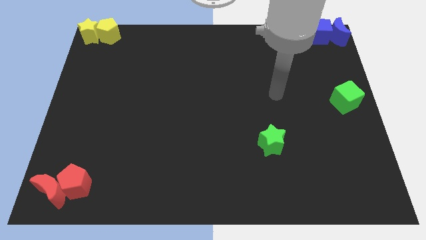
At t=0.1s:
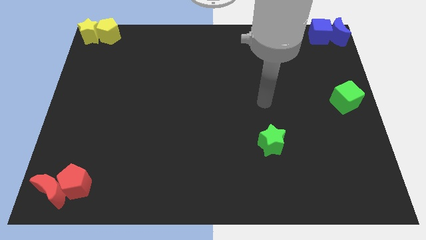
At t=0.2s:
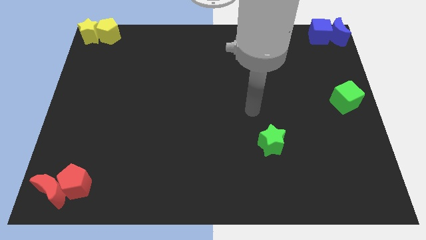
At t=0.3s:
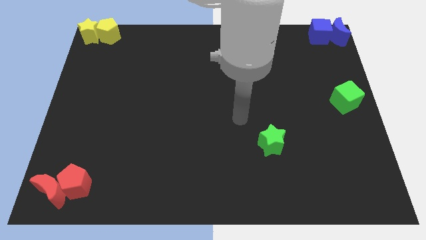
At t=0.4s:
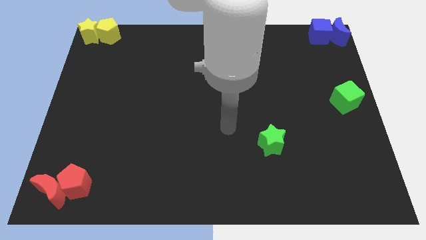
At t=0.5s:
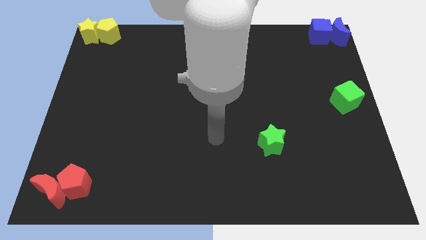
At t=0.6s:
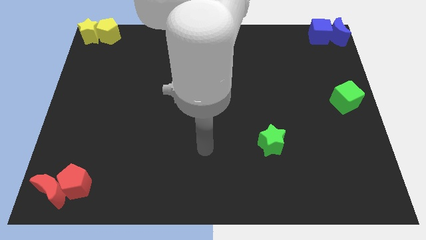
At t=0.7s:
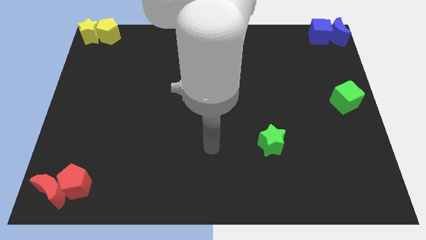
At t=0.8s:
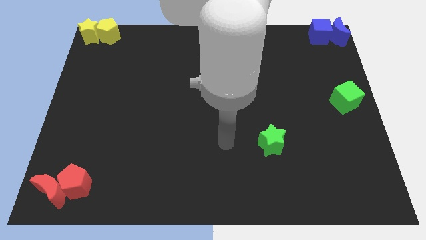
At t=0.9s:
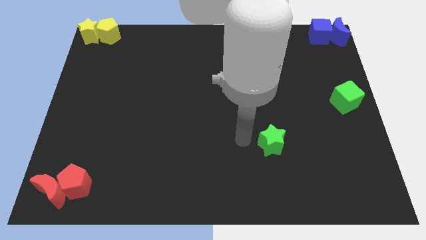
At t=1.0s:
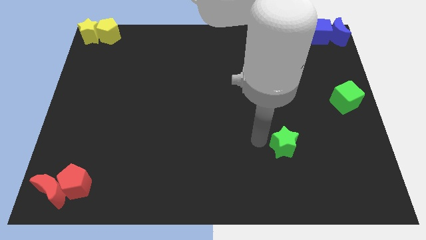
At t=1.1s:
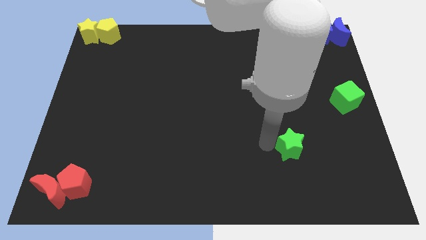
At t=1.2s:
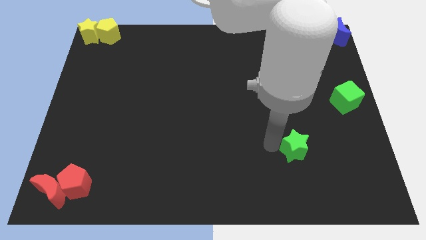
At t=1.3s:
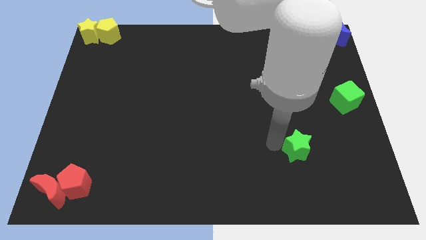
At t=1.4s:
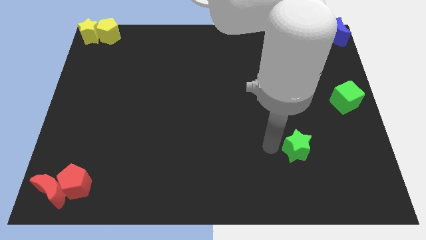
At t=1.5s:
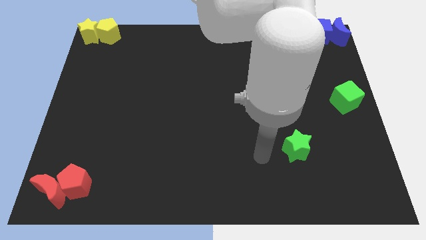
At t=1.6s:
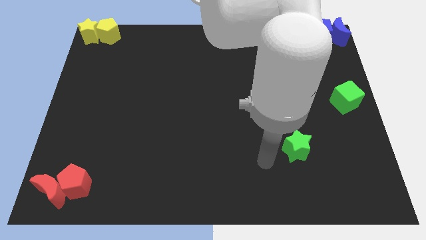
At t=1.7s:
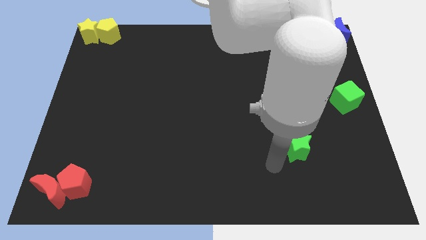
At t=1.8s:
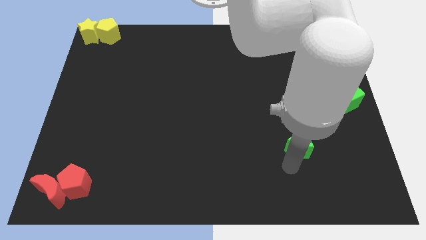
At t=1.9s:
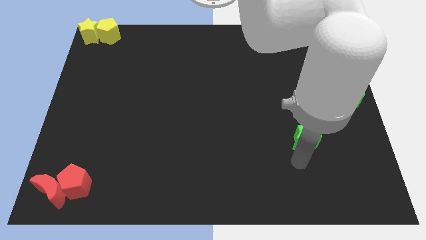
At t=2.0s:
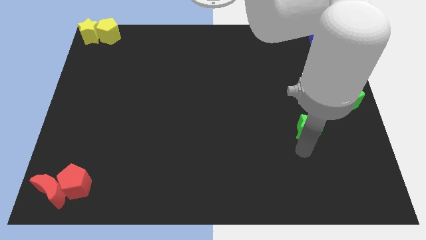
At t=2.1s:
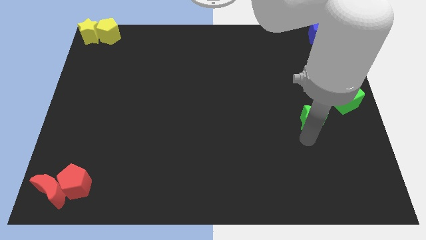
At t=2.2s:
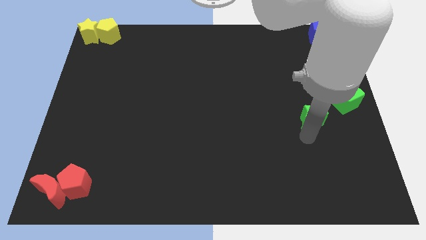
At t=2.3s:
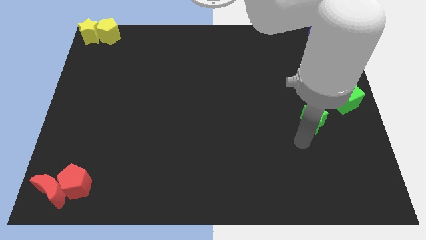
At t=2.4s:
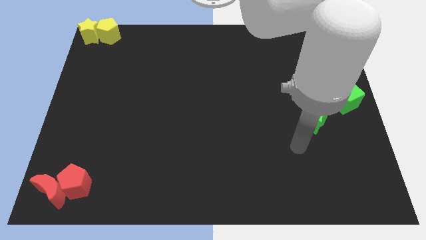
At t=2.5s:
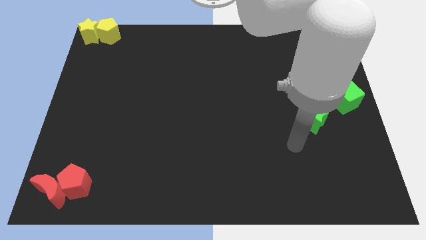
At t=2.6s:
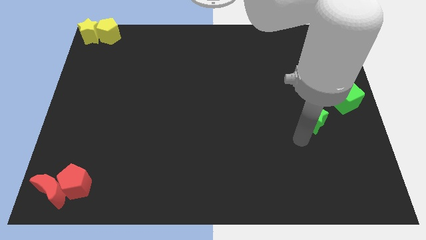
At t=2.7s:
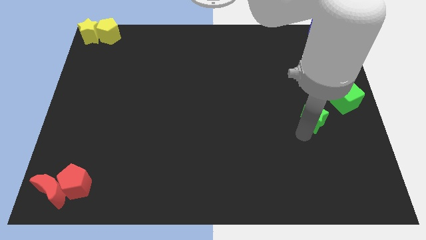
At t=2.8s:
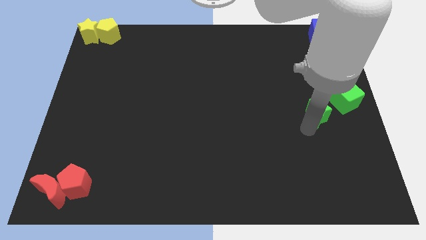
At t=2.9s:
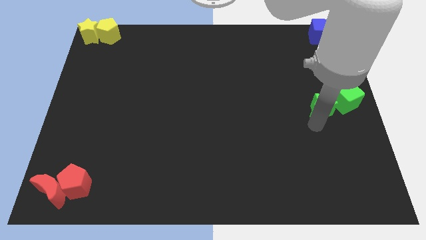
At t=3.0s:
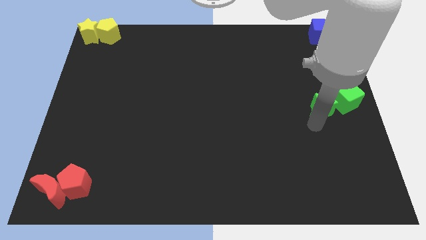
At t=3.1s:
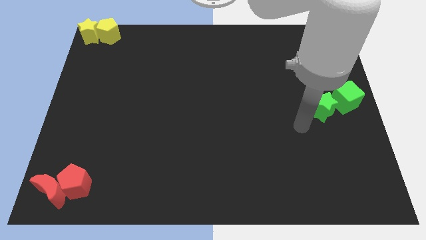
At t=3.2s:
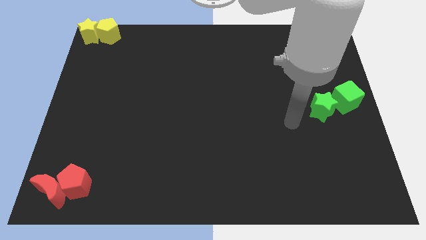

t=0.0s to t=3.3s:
push the green star left to the green cube

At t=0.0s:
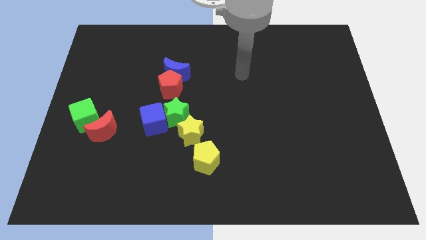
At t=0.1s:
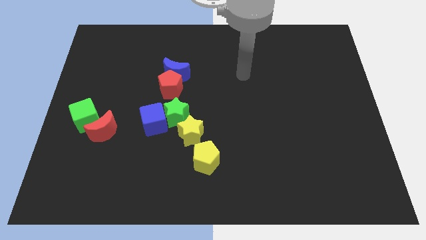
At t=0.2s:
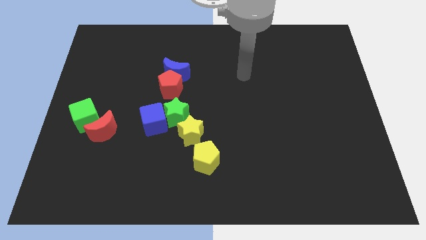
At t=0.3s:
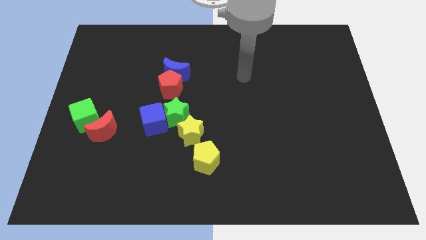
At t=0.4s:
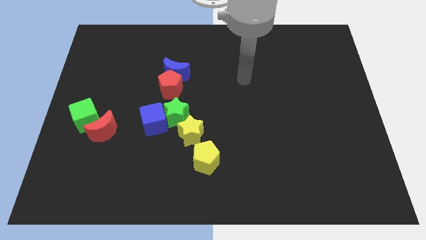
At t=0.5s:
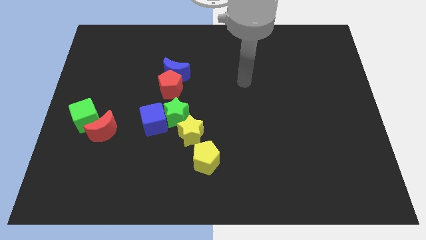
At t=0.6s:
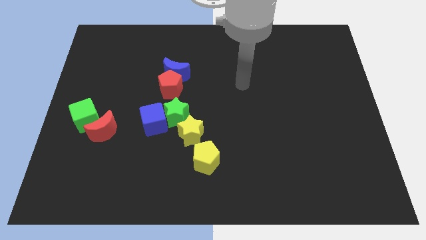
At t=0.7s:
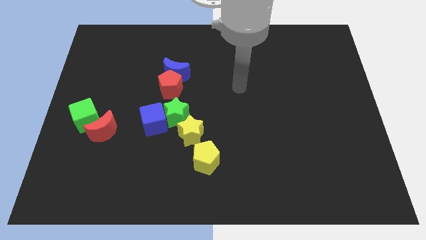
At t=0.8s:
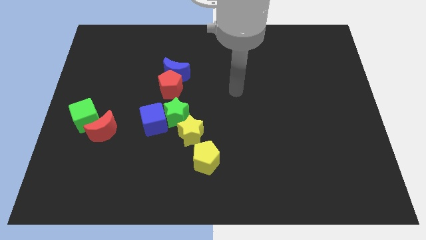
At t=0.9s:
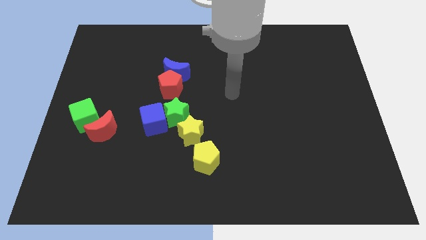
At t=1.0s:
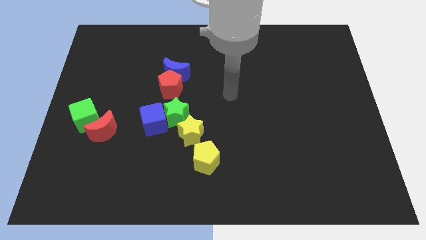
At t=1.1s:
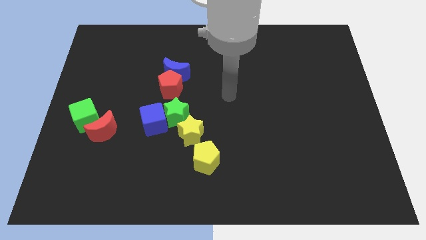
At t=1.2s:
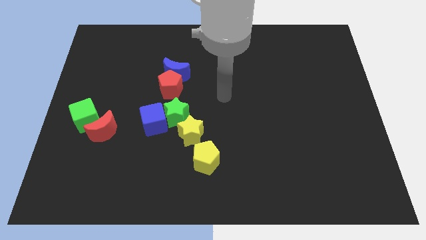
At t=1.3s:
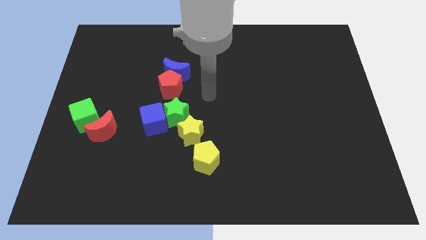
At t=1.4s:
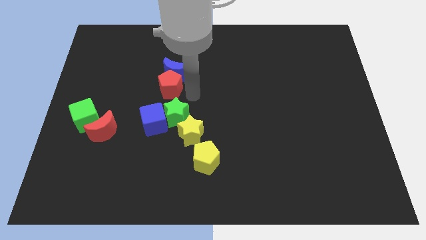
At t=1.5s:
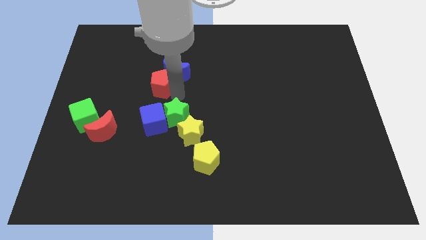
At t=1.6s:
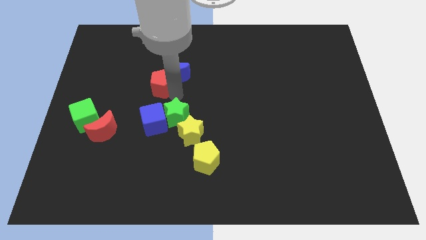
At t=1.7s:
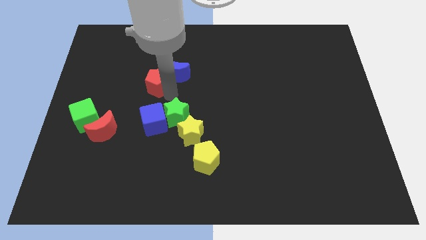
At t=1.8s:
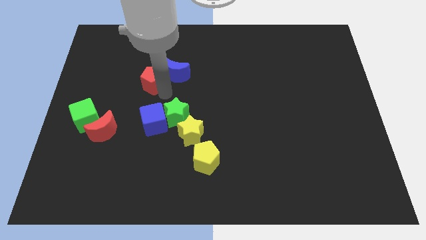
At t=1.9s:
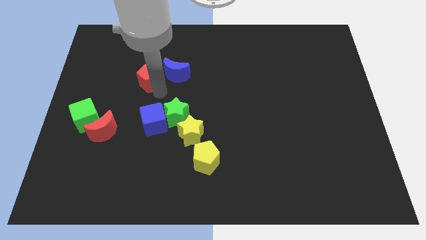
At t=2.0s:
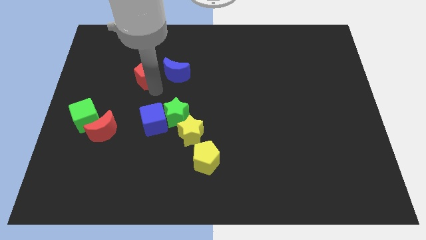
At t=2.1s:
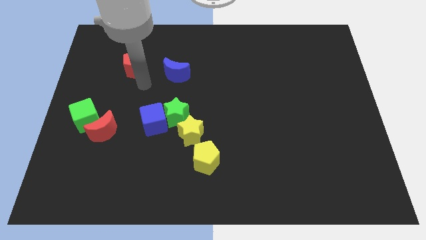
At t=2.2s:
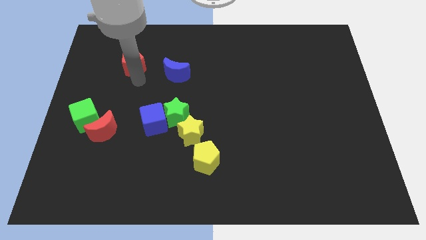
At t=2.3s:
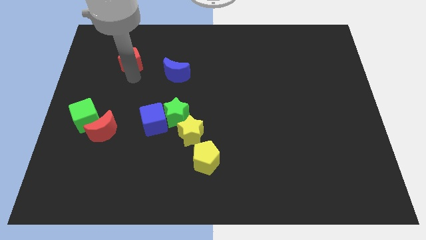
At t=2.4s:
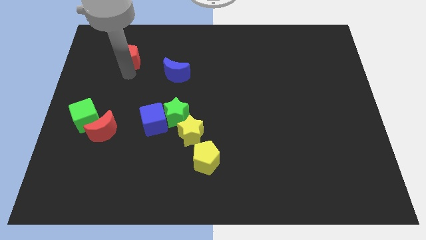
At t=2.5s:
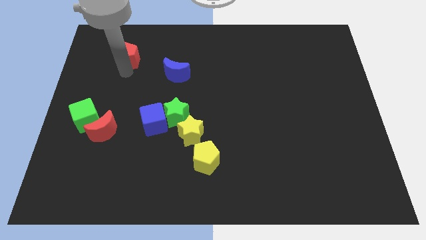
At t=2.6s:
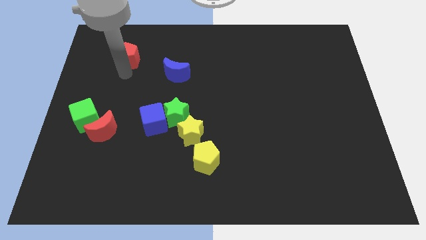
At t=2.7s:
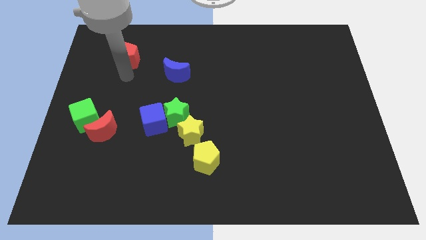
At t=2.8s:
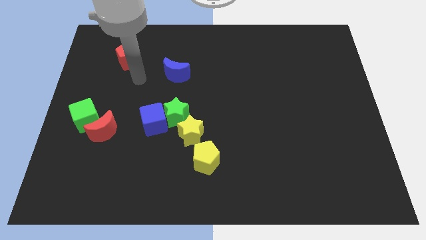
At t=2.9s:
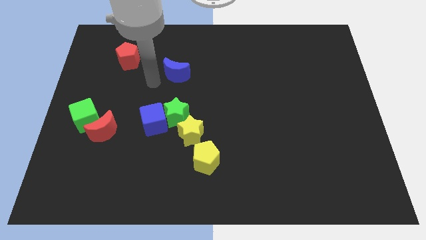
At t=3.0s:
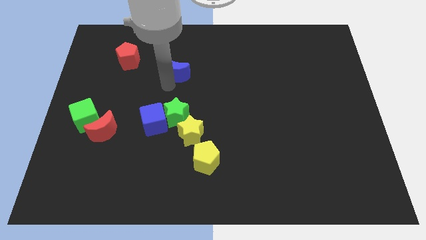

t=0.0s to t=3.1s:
push the red pentagon above the red crescent

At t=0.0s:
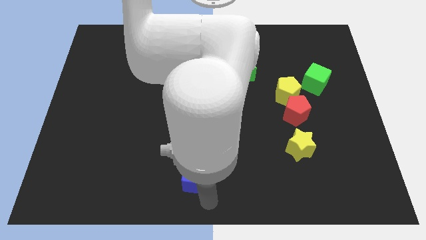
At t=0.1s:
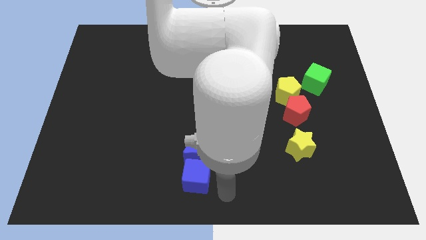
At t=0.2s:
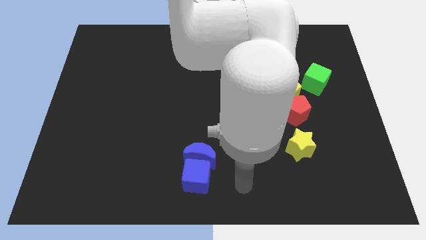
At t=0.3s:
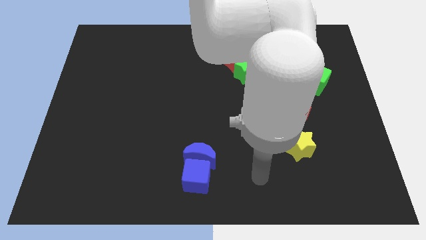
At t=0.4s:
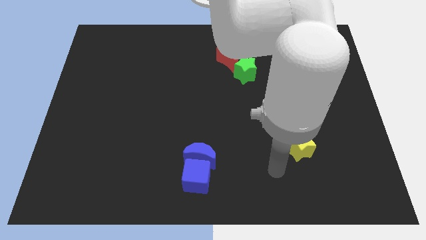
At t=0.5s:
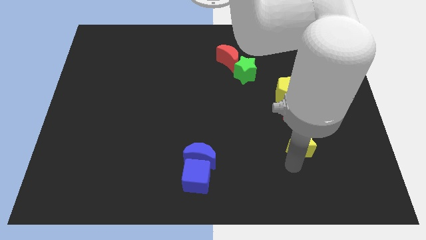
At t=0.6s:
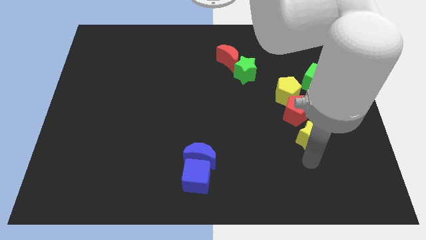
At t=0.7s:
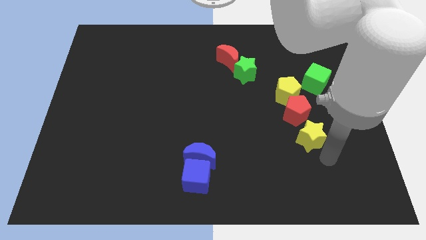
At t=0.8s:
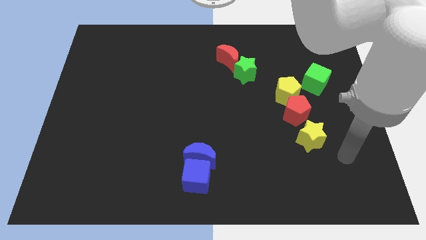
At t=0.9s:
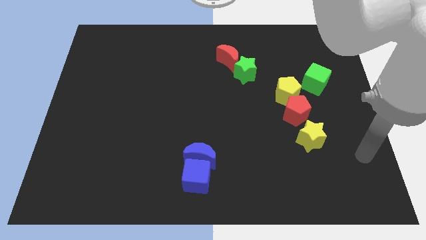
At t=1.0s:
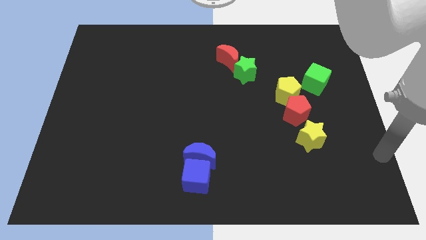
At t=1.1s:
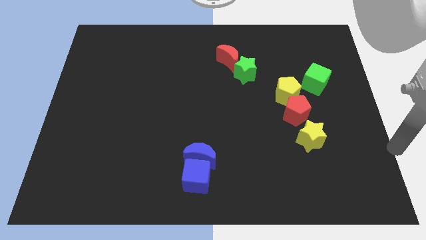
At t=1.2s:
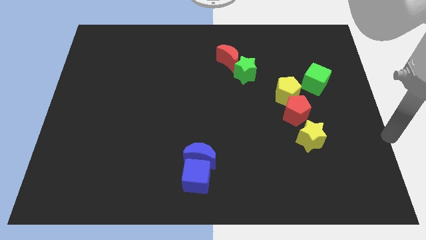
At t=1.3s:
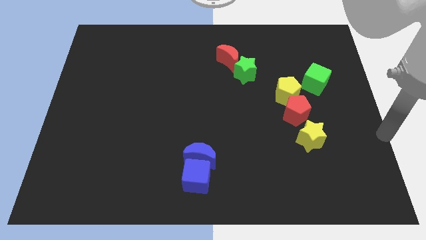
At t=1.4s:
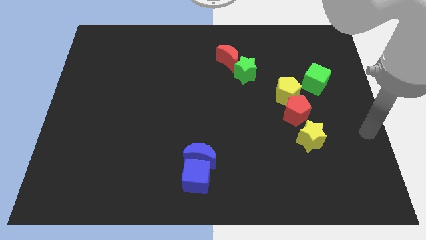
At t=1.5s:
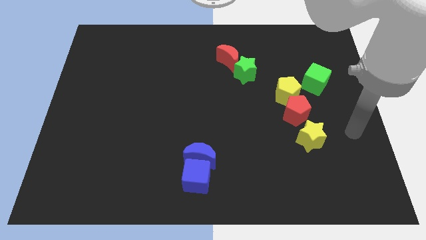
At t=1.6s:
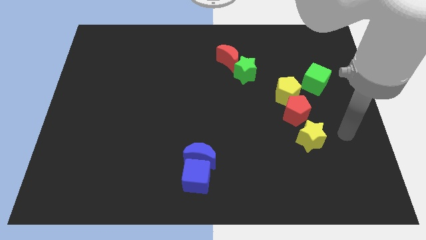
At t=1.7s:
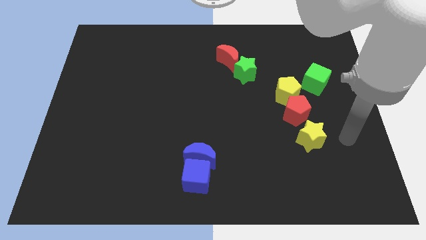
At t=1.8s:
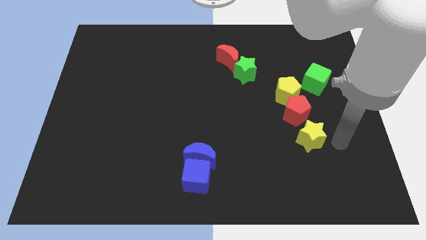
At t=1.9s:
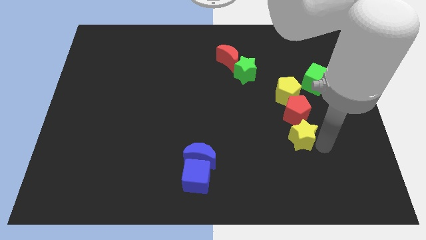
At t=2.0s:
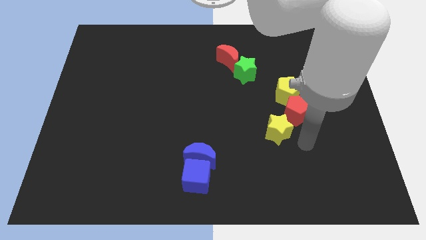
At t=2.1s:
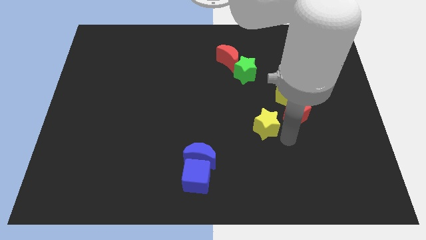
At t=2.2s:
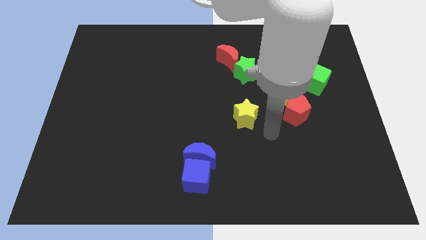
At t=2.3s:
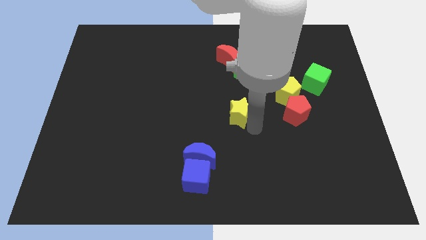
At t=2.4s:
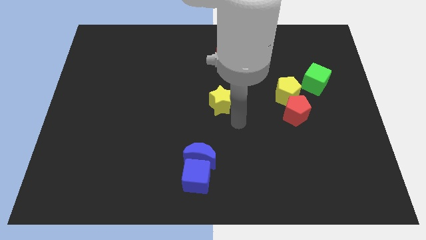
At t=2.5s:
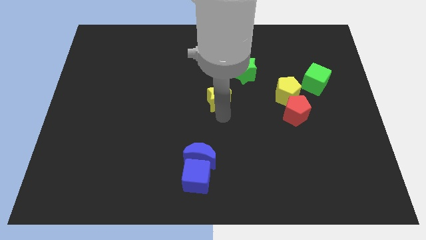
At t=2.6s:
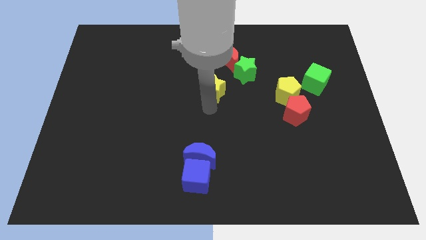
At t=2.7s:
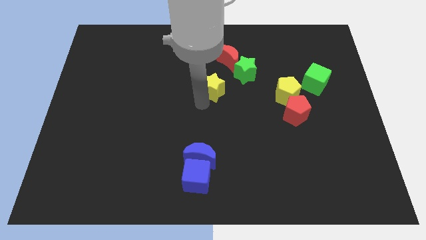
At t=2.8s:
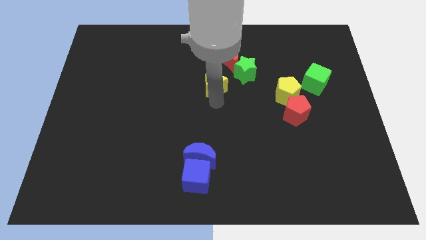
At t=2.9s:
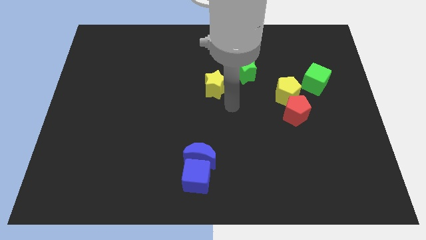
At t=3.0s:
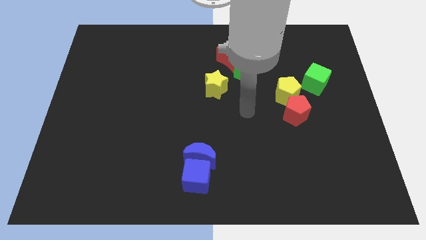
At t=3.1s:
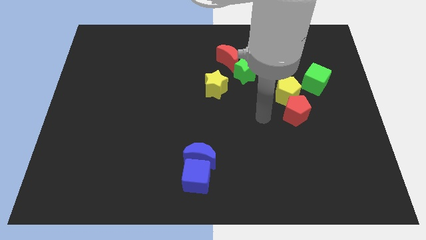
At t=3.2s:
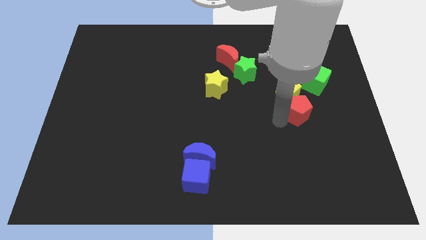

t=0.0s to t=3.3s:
move the yellow star to the center of the board
